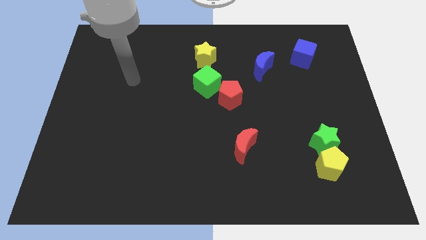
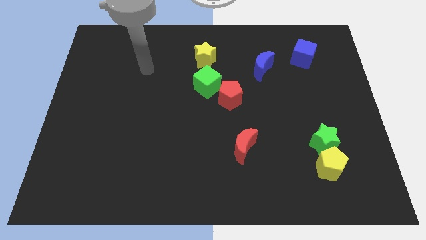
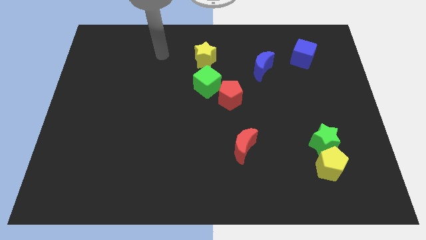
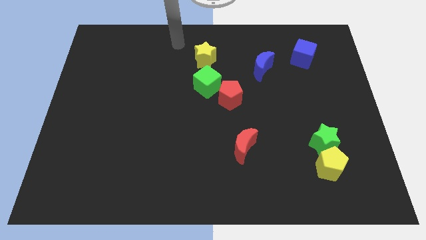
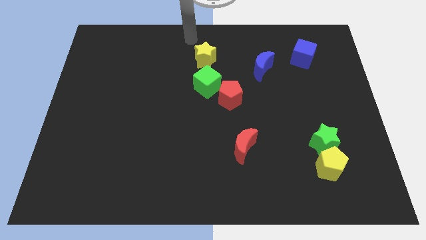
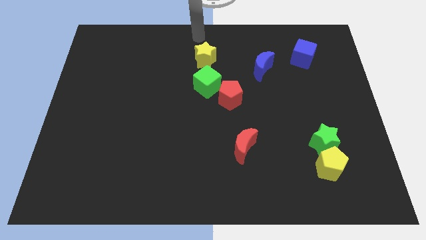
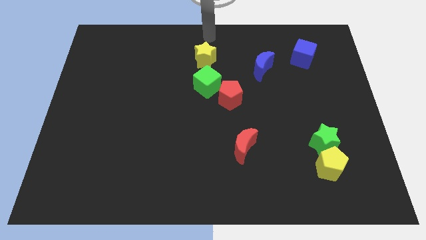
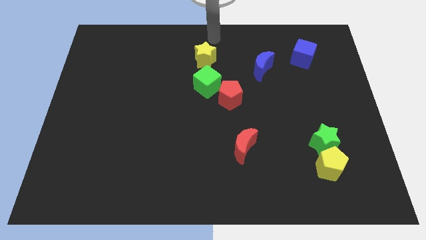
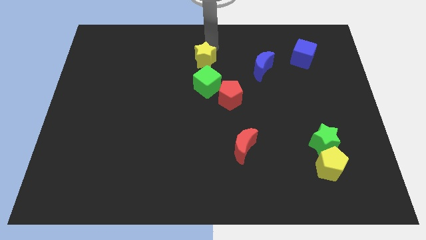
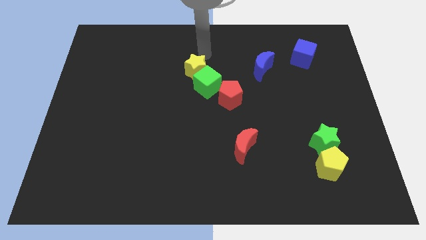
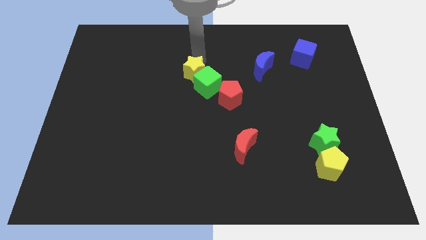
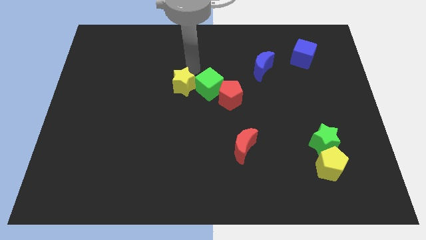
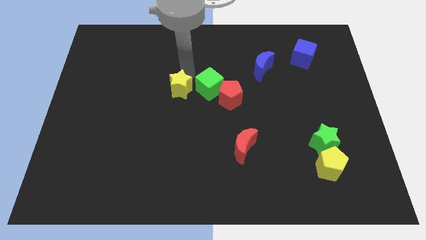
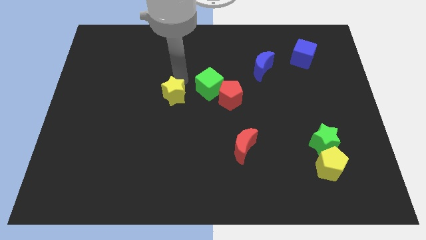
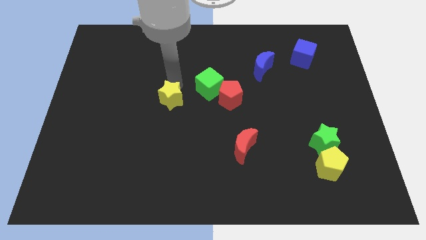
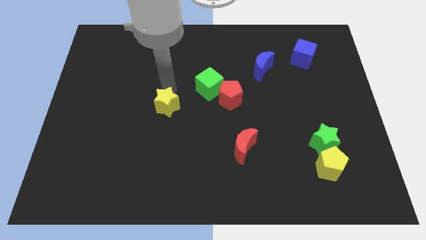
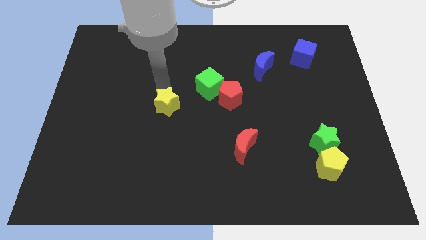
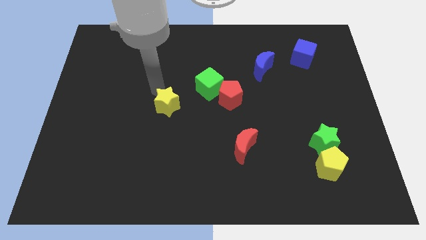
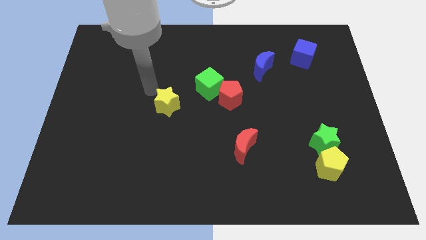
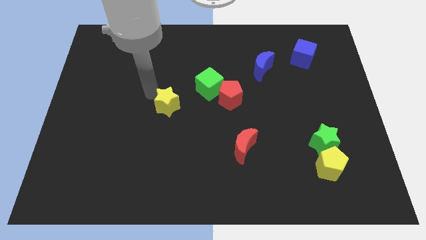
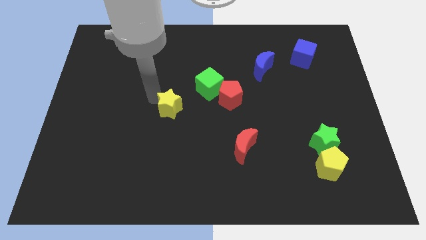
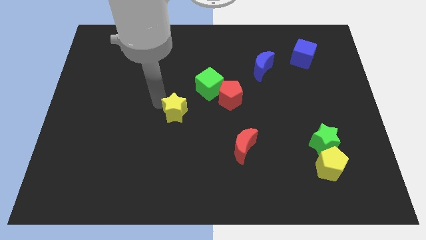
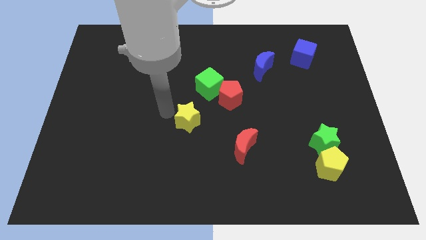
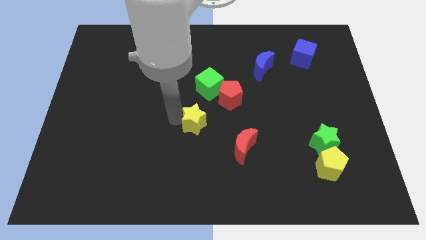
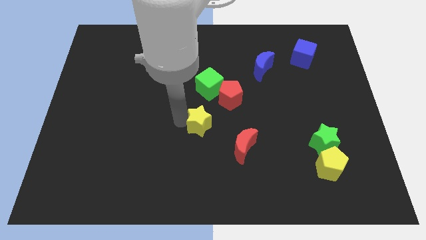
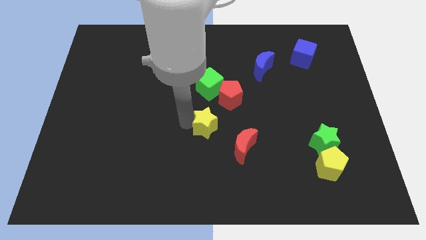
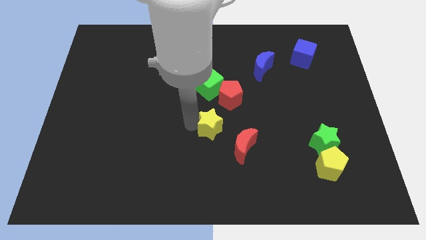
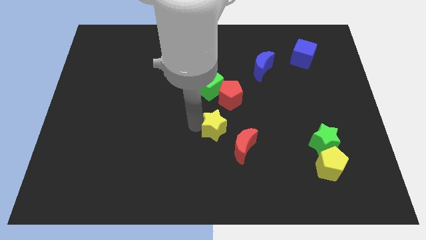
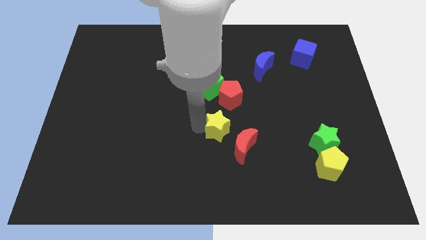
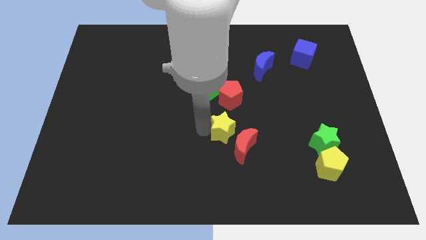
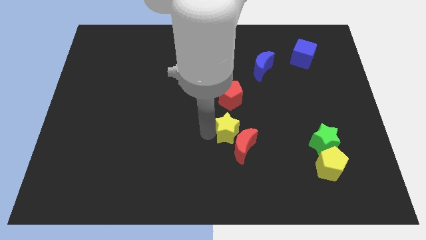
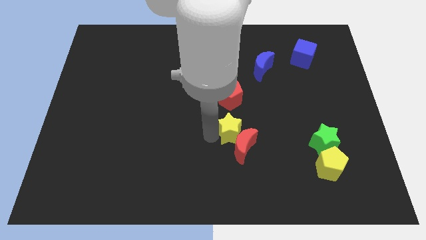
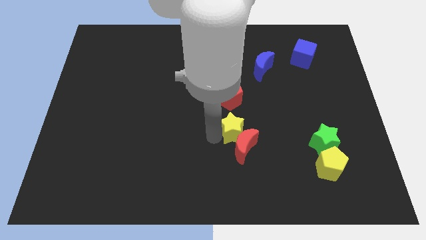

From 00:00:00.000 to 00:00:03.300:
push the yellow star towards the red moon

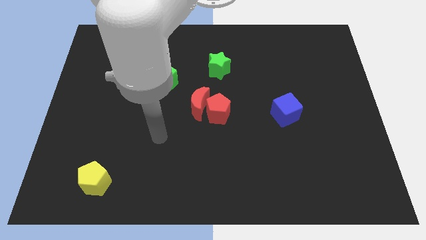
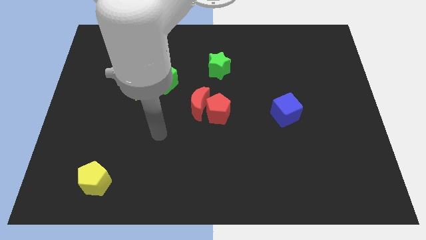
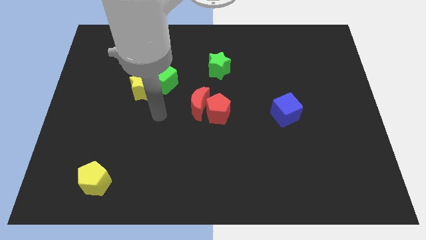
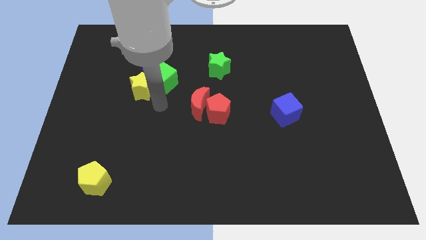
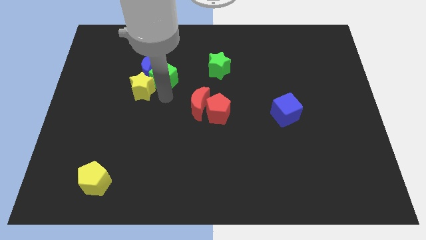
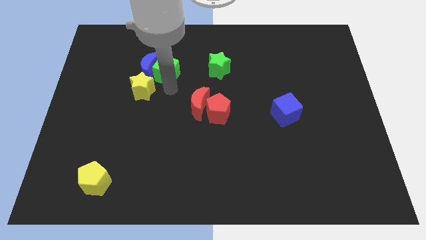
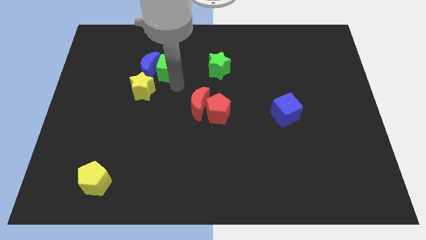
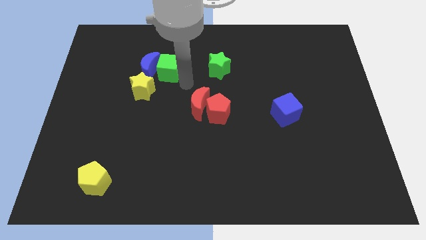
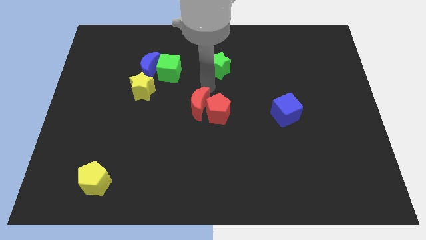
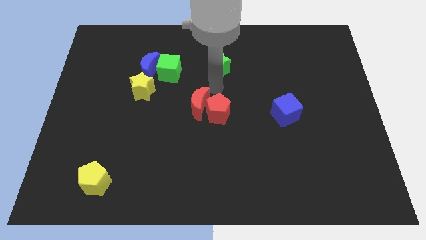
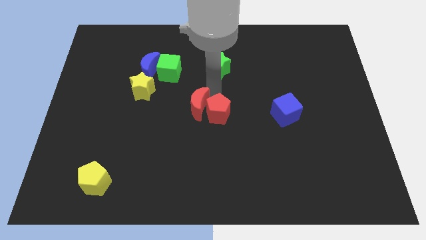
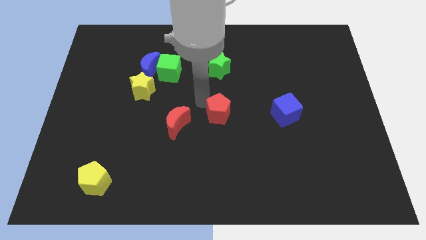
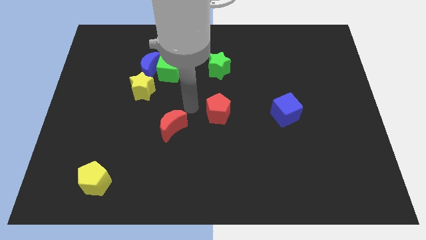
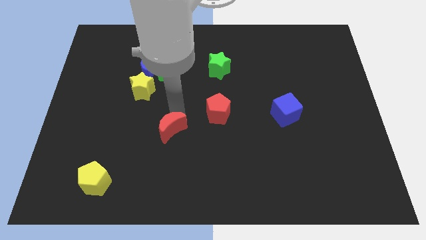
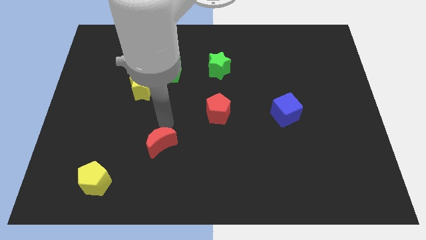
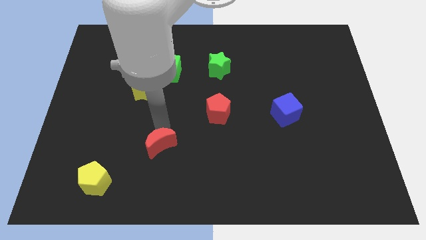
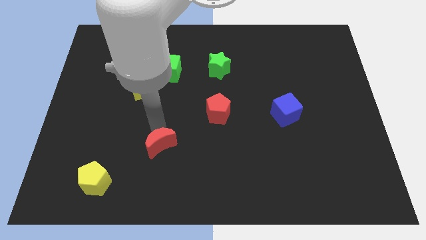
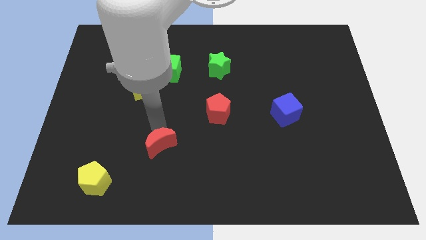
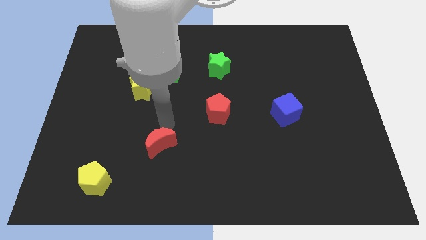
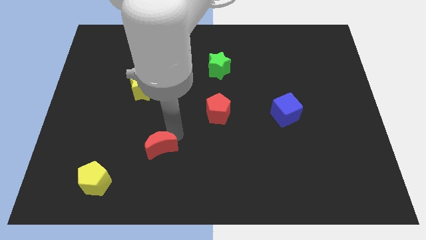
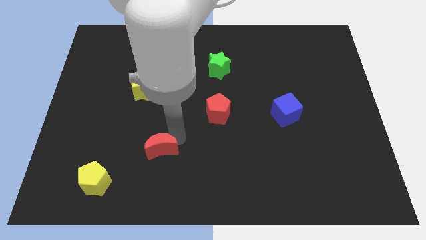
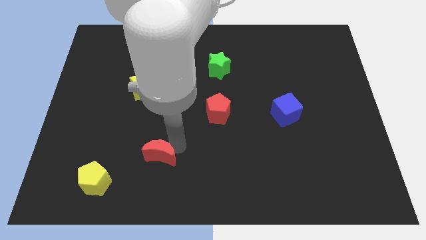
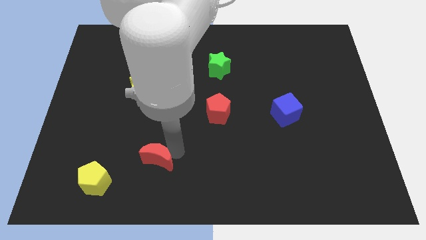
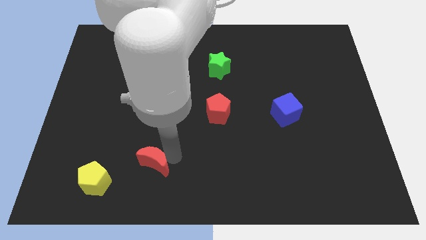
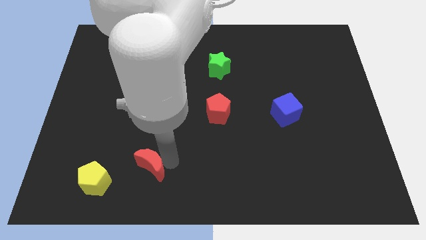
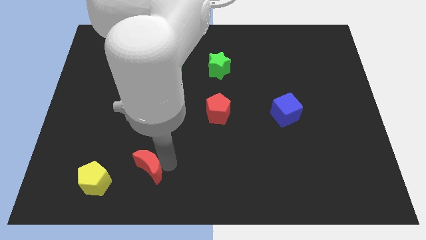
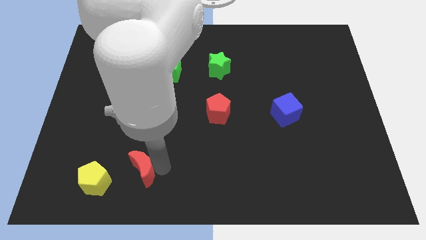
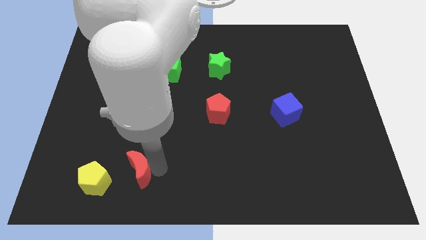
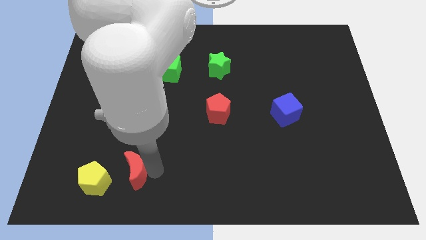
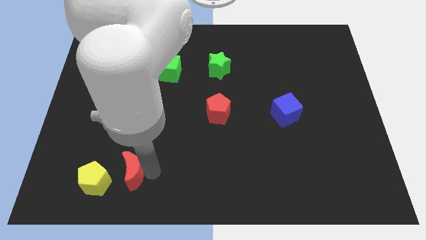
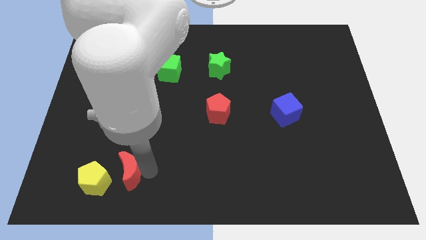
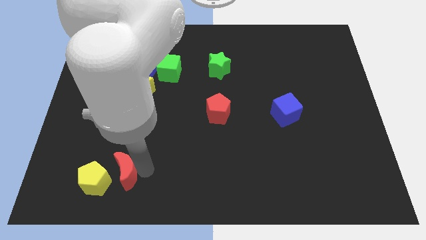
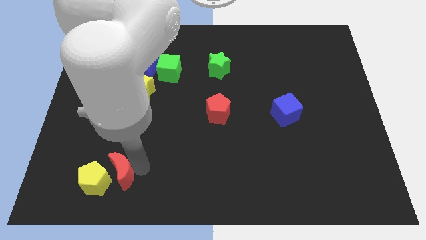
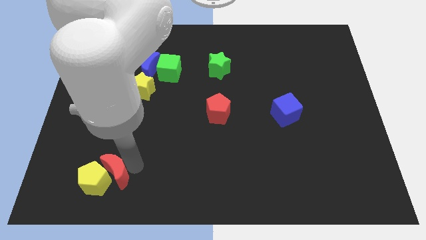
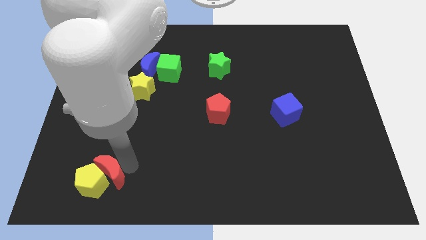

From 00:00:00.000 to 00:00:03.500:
put the red moon to the yellow pentagon

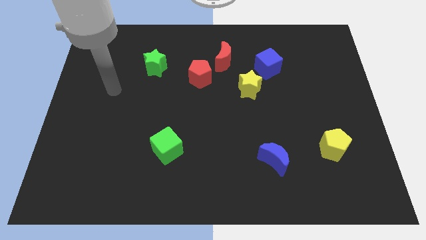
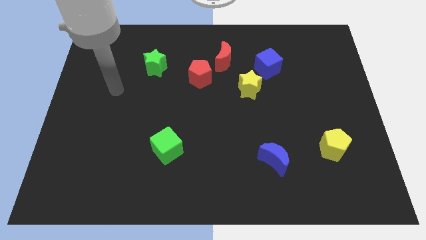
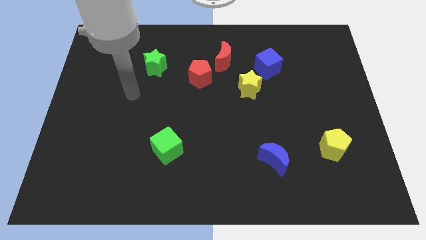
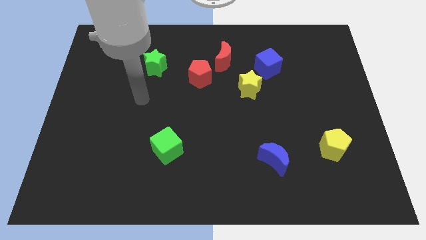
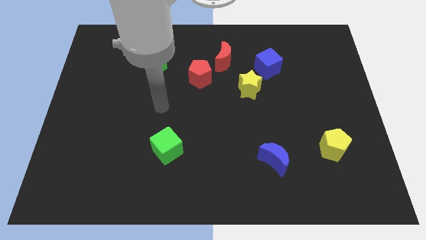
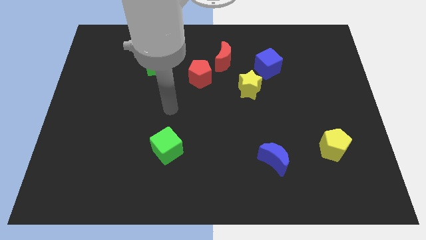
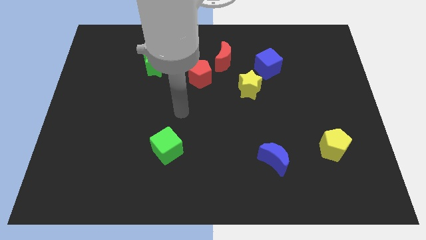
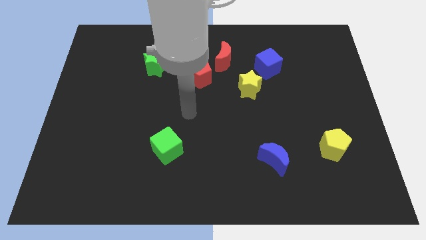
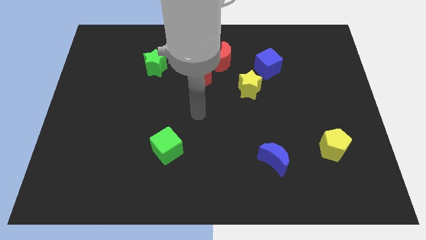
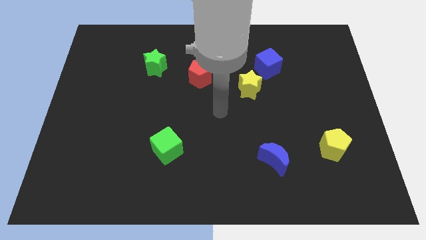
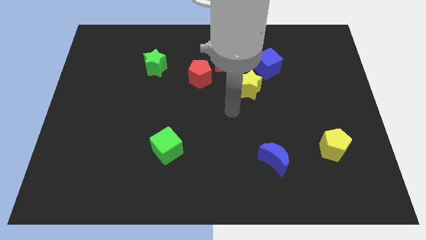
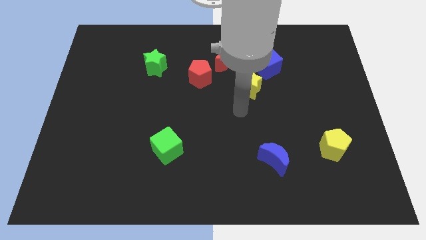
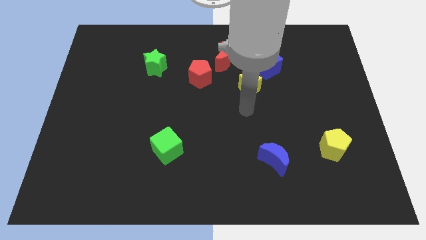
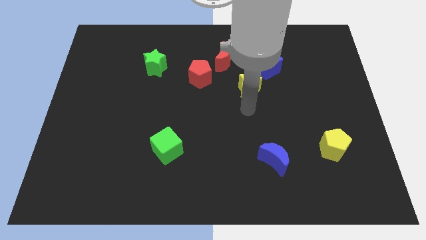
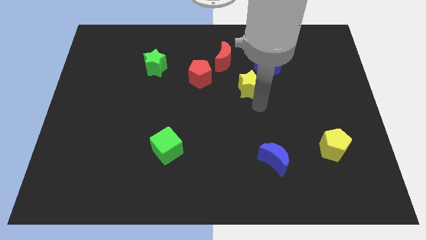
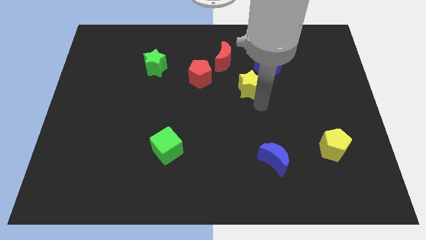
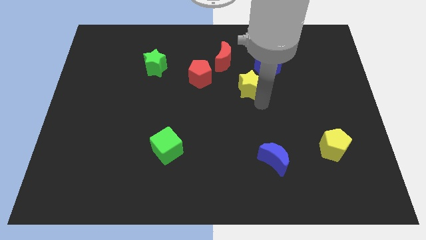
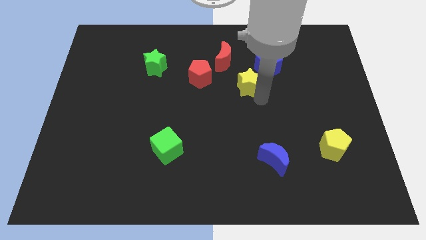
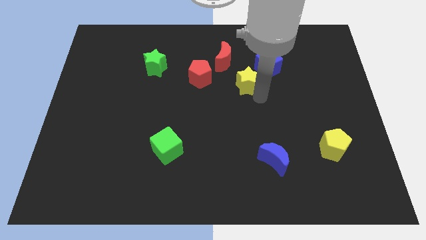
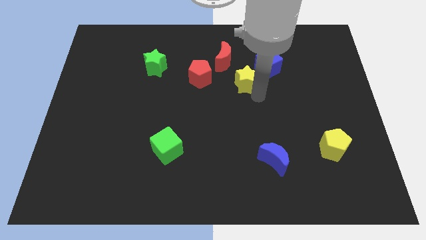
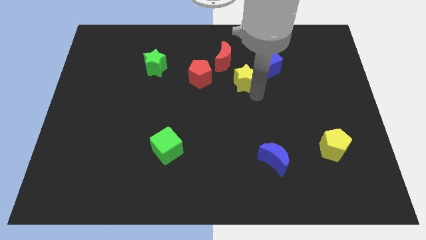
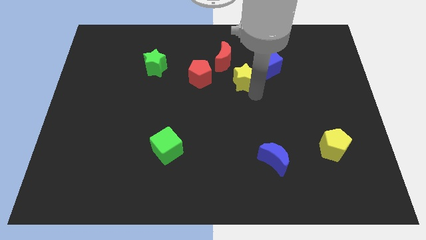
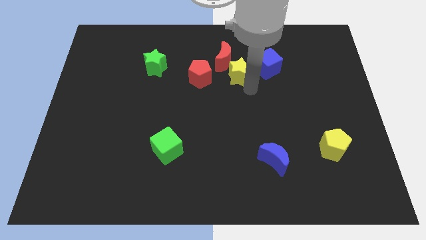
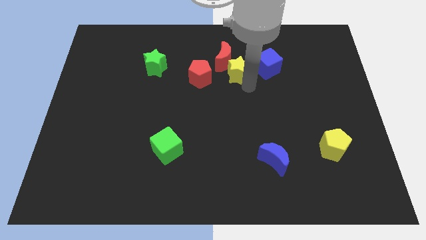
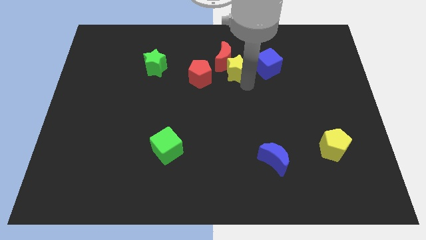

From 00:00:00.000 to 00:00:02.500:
slide the yellow star next to the red moon
